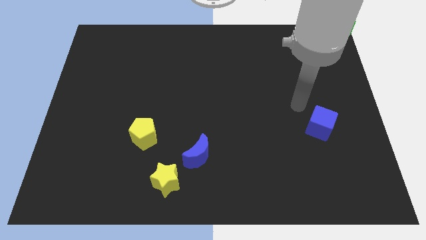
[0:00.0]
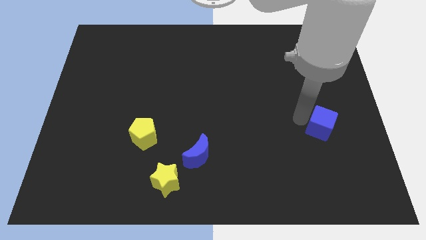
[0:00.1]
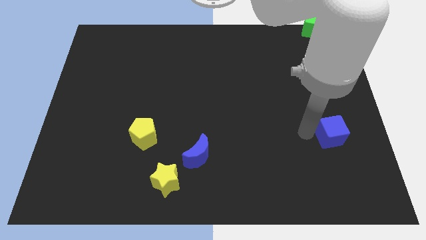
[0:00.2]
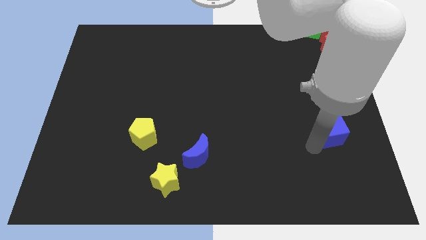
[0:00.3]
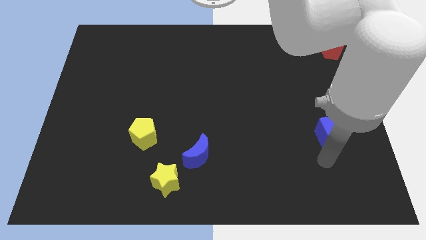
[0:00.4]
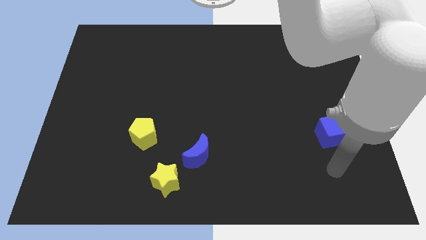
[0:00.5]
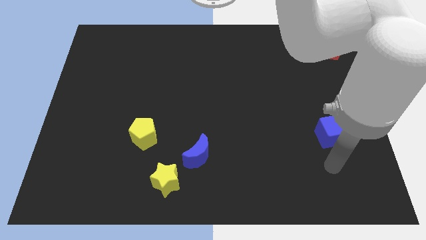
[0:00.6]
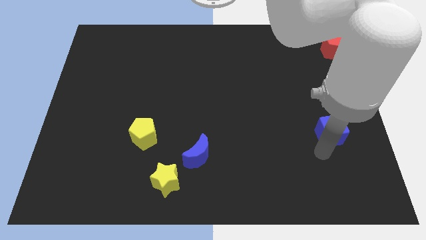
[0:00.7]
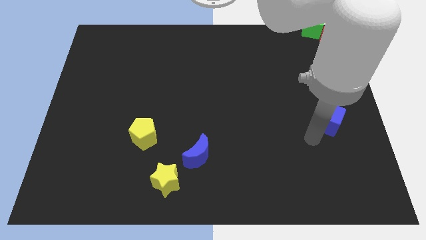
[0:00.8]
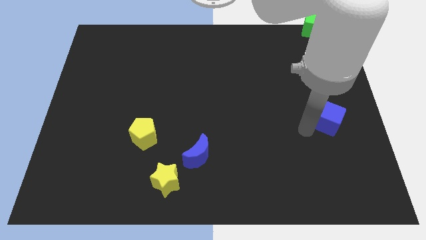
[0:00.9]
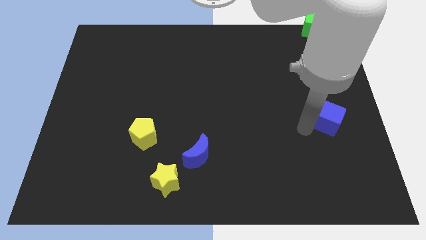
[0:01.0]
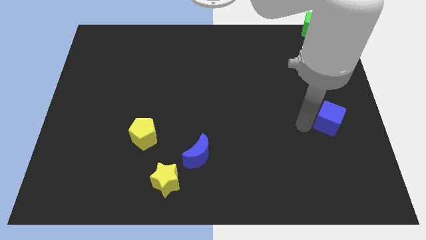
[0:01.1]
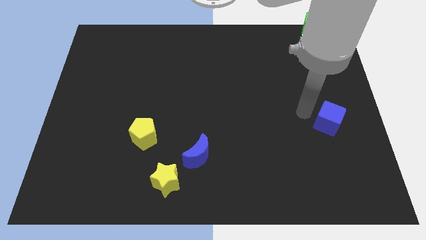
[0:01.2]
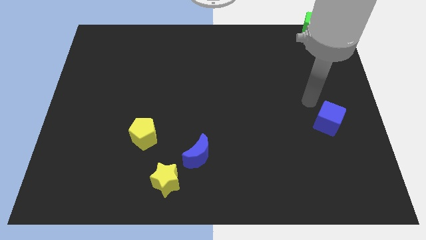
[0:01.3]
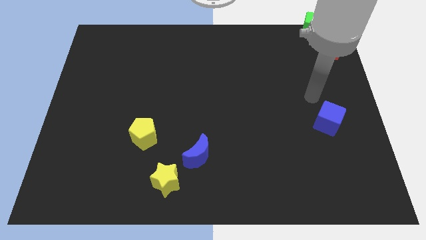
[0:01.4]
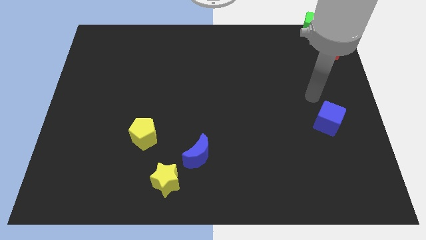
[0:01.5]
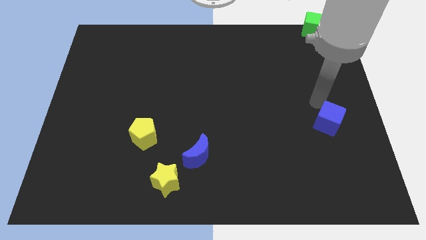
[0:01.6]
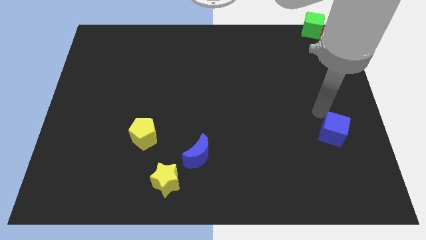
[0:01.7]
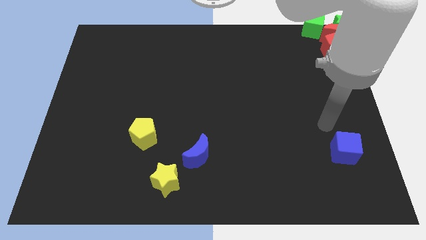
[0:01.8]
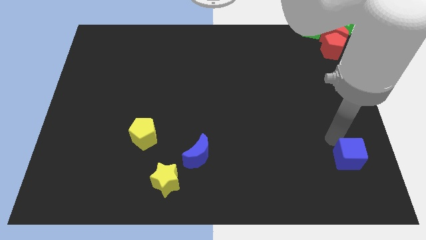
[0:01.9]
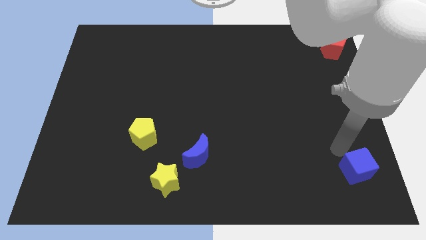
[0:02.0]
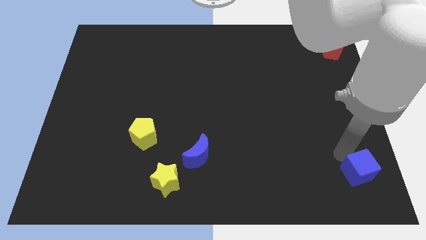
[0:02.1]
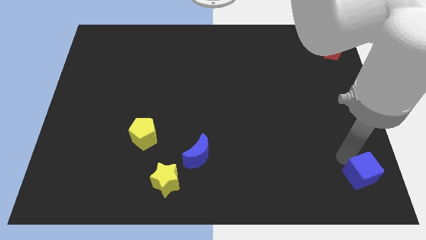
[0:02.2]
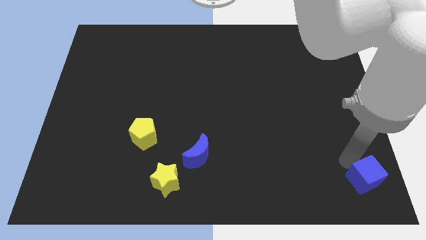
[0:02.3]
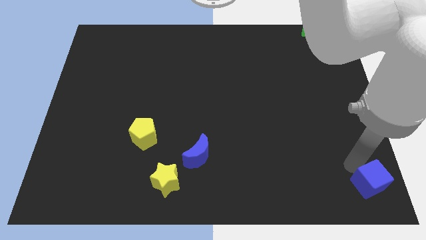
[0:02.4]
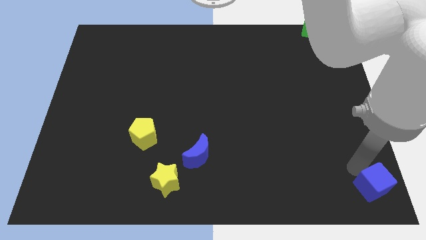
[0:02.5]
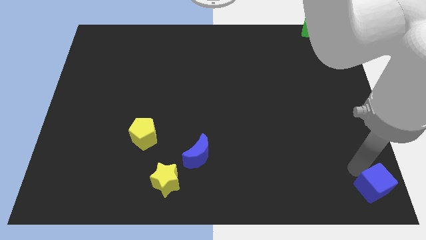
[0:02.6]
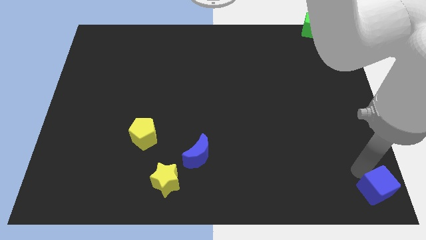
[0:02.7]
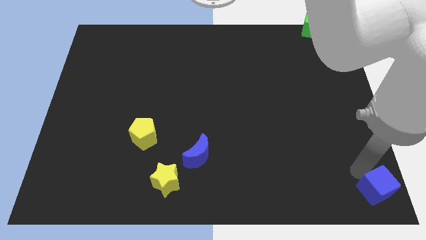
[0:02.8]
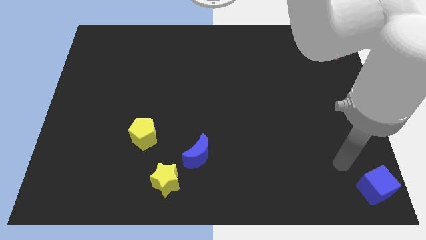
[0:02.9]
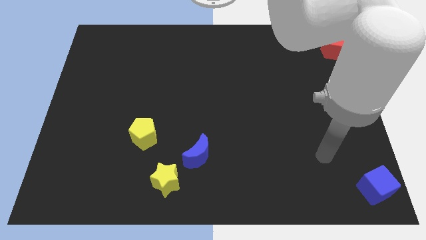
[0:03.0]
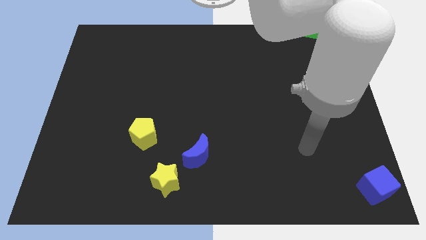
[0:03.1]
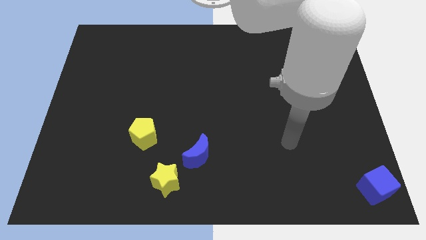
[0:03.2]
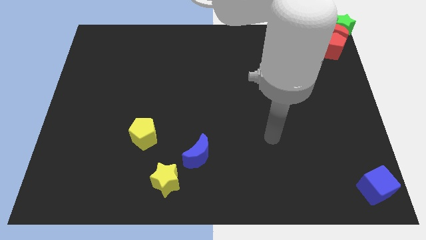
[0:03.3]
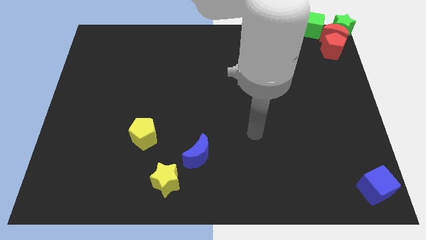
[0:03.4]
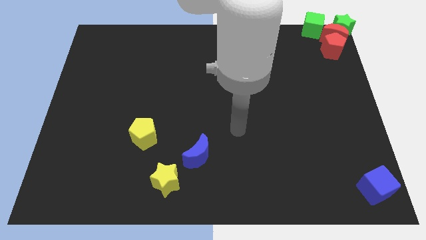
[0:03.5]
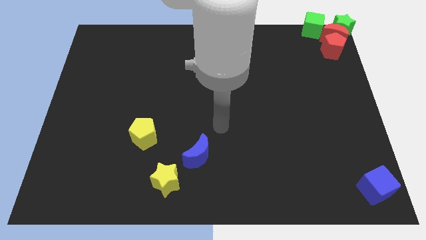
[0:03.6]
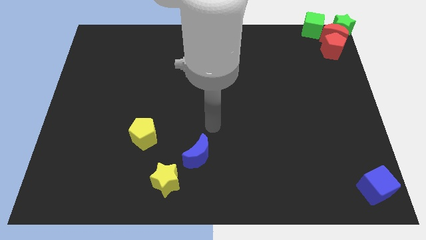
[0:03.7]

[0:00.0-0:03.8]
drag the blue cube to the bottom right corner

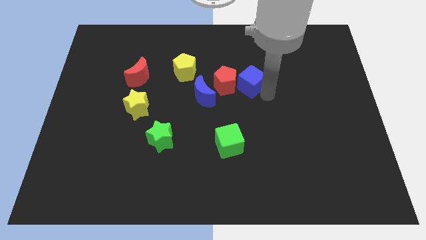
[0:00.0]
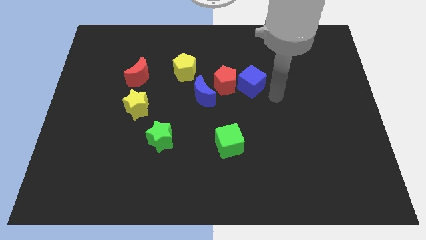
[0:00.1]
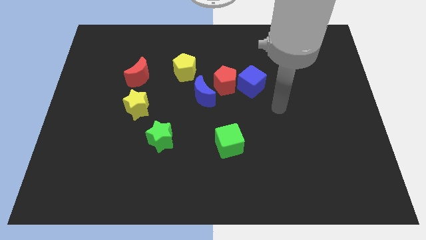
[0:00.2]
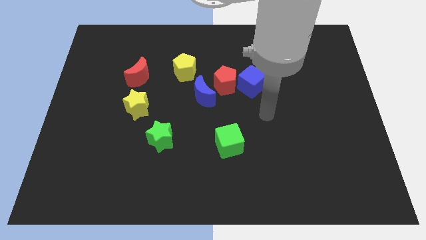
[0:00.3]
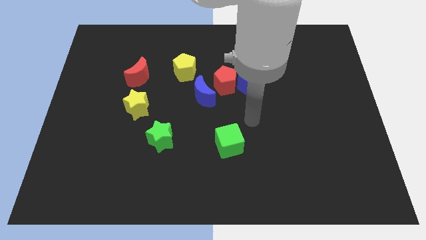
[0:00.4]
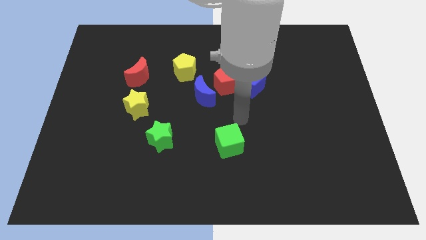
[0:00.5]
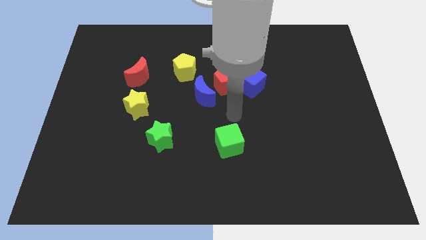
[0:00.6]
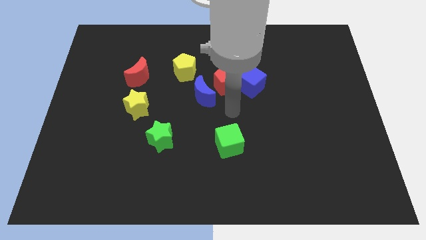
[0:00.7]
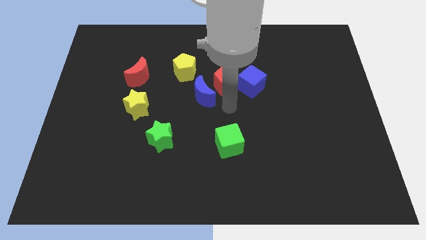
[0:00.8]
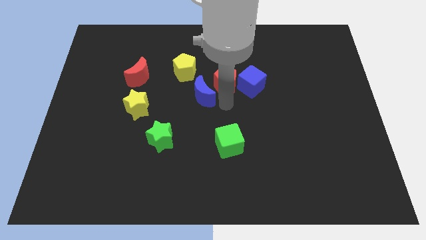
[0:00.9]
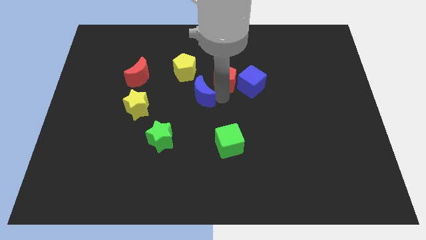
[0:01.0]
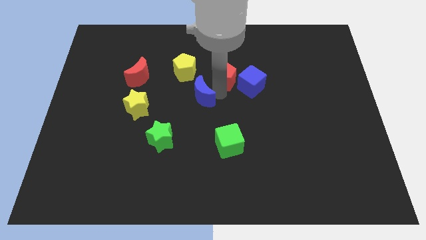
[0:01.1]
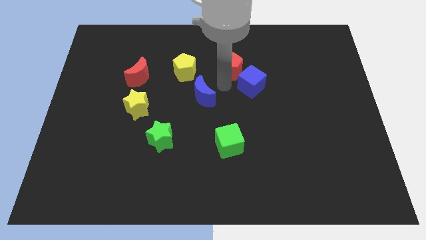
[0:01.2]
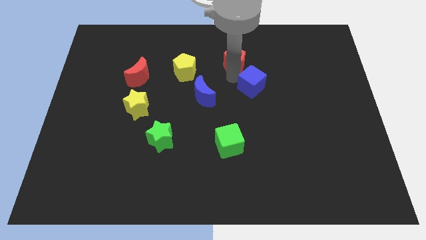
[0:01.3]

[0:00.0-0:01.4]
move the red pentagon above the blue cube

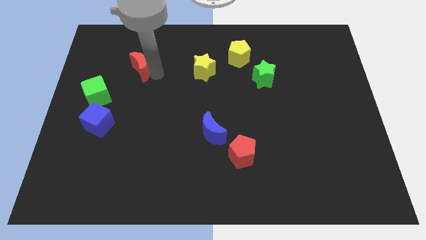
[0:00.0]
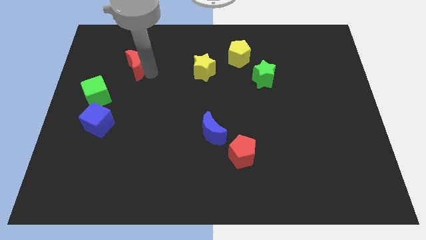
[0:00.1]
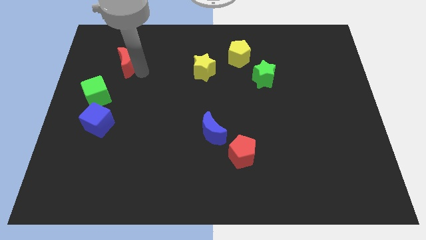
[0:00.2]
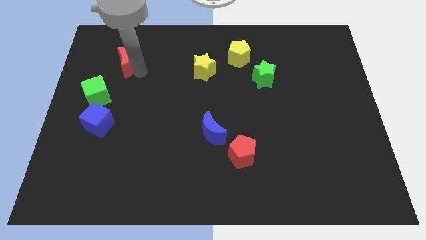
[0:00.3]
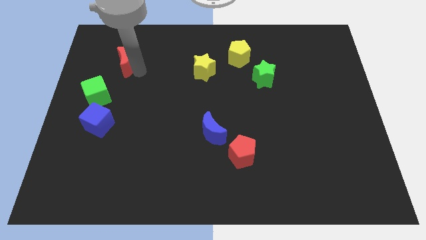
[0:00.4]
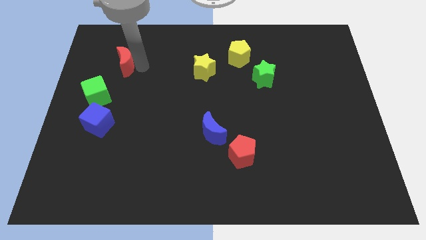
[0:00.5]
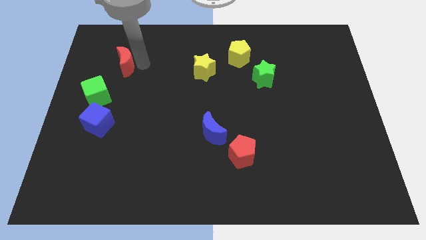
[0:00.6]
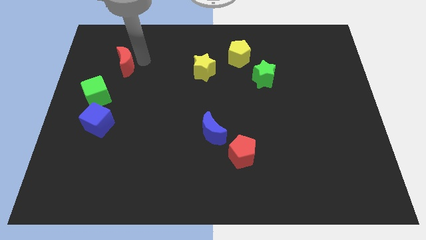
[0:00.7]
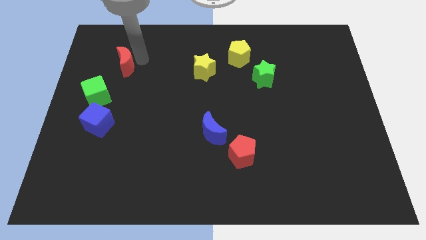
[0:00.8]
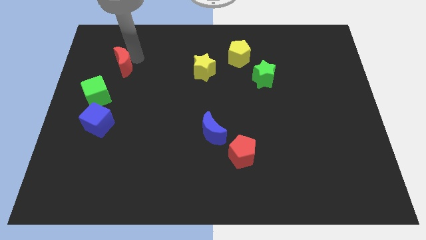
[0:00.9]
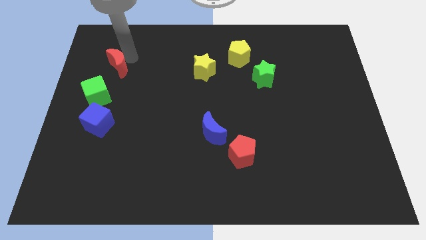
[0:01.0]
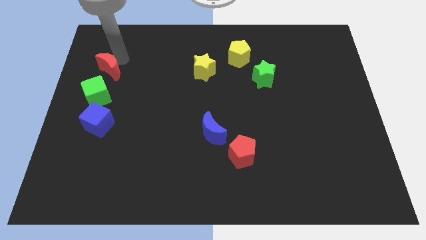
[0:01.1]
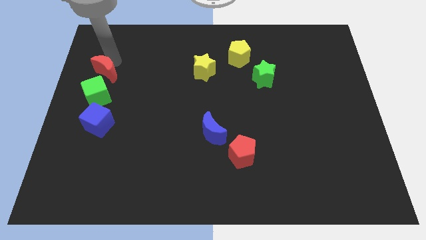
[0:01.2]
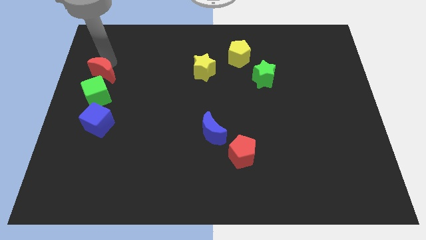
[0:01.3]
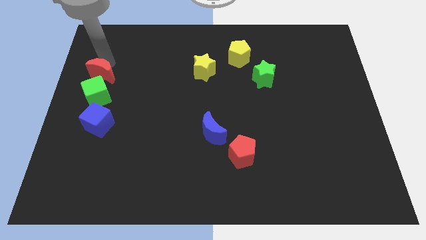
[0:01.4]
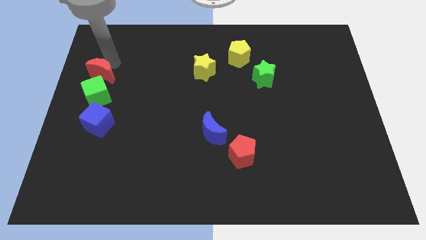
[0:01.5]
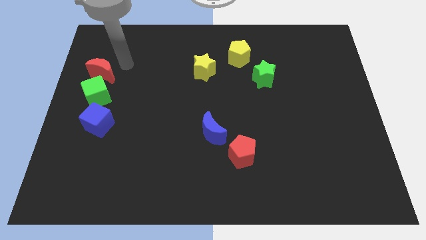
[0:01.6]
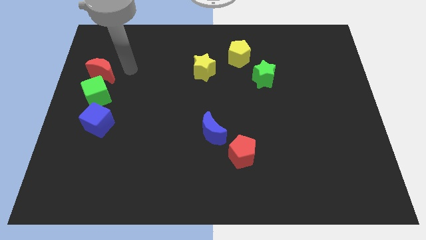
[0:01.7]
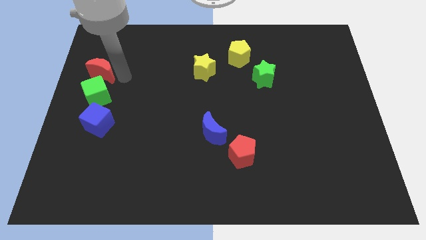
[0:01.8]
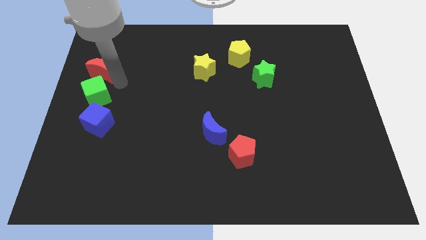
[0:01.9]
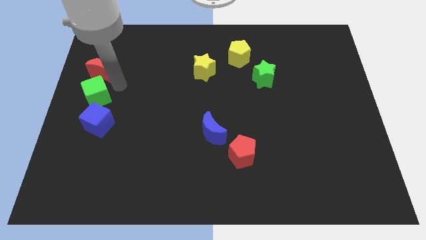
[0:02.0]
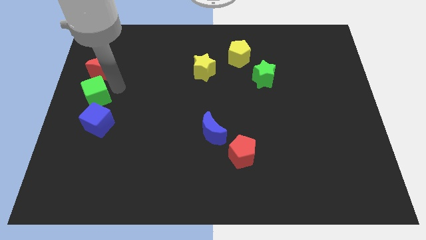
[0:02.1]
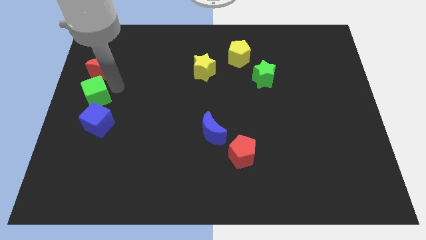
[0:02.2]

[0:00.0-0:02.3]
place the red moon above the green cube

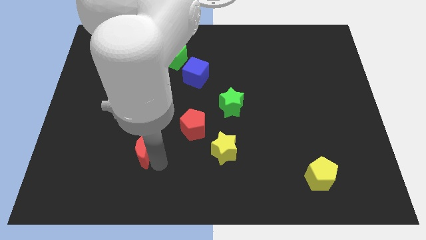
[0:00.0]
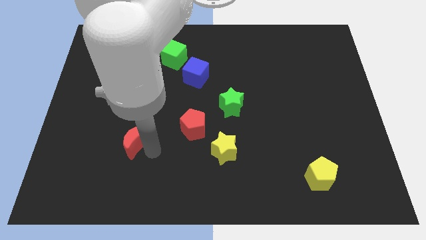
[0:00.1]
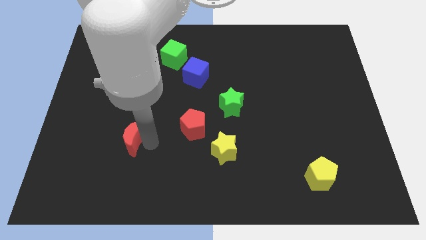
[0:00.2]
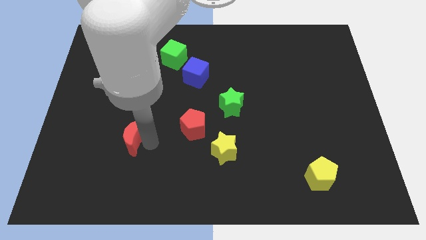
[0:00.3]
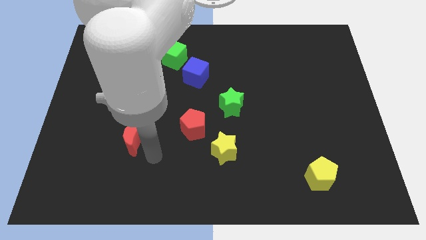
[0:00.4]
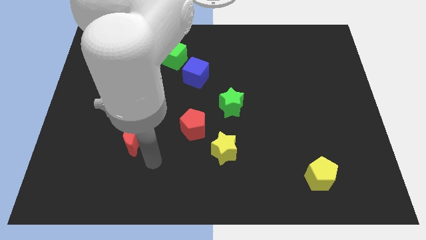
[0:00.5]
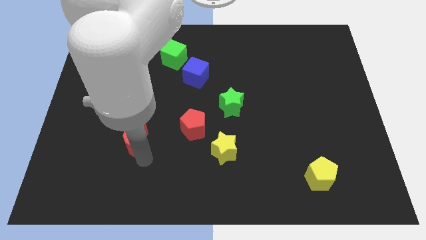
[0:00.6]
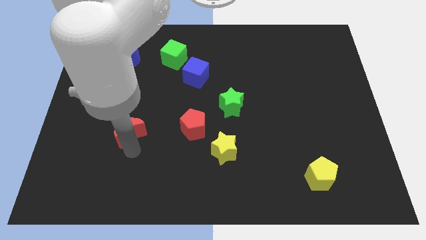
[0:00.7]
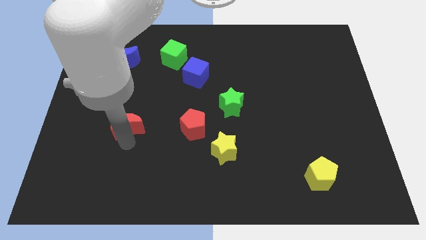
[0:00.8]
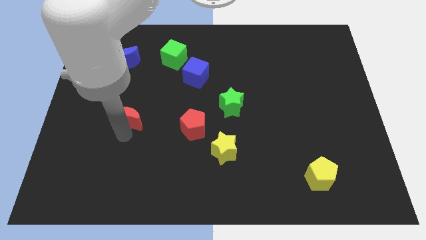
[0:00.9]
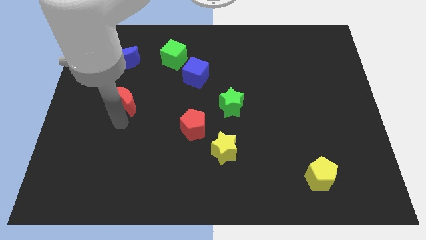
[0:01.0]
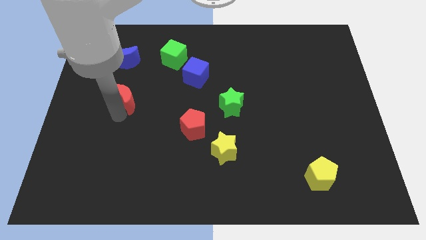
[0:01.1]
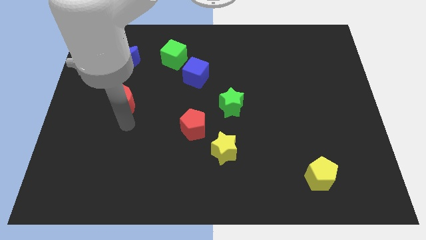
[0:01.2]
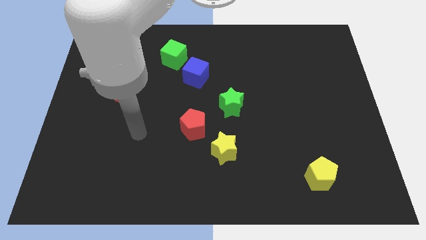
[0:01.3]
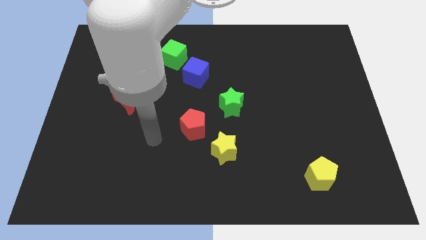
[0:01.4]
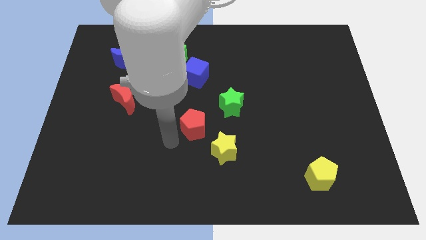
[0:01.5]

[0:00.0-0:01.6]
place red moon to the bottom of blue moon
